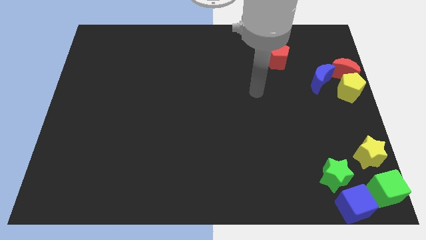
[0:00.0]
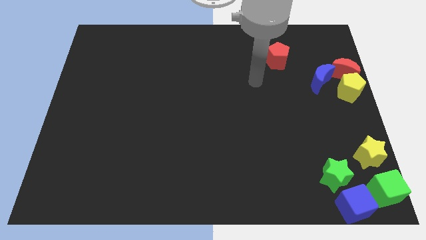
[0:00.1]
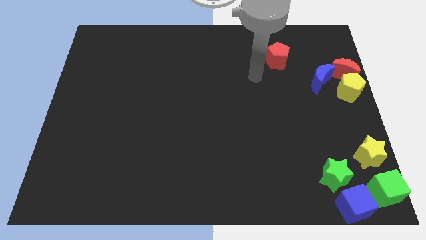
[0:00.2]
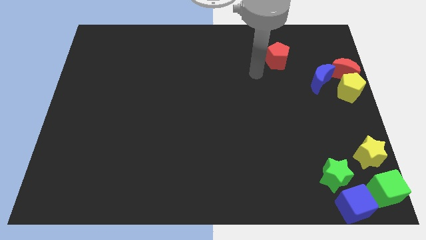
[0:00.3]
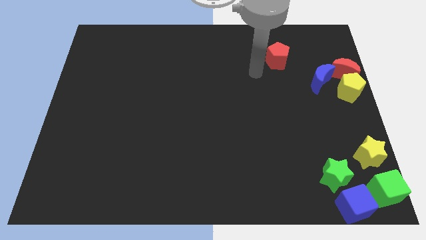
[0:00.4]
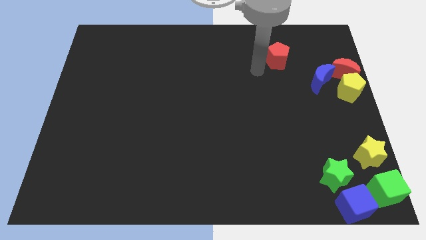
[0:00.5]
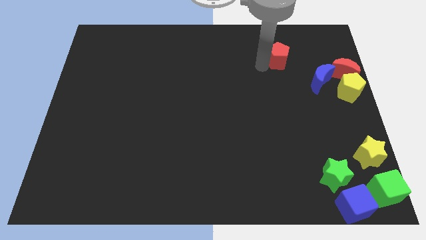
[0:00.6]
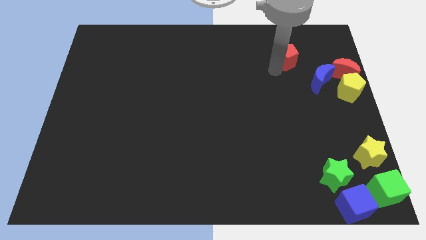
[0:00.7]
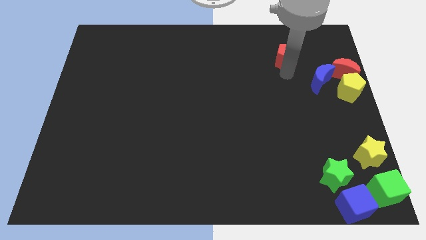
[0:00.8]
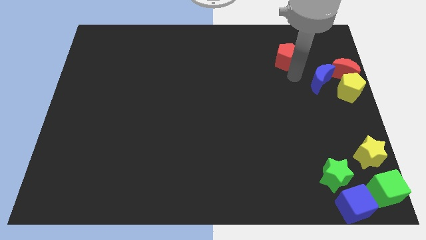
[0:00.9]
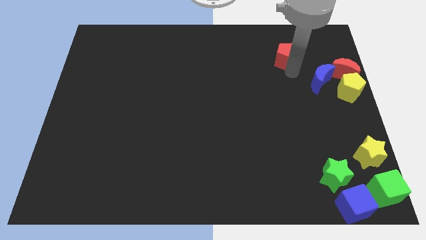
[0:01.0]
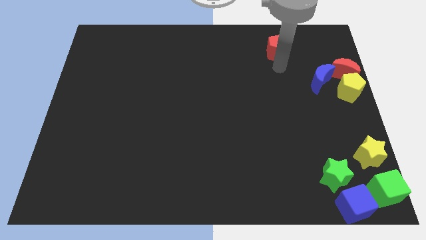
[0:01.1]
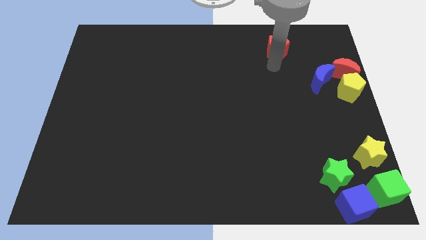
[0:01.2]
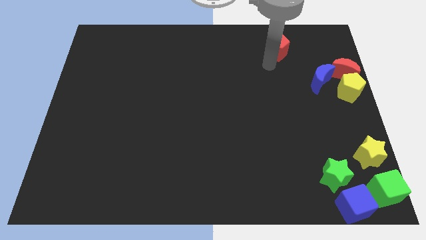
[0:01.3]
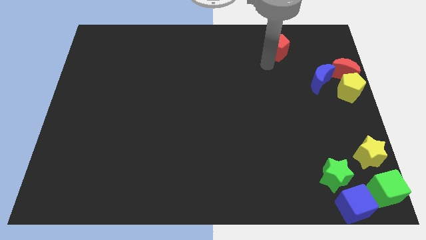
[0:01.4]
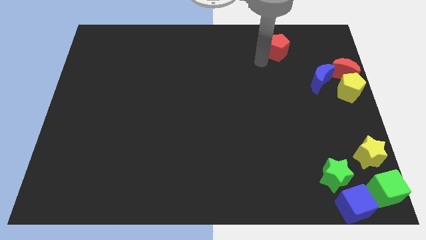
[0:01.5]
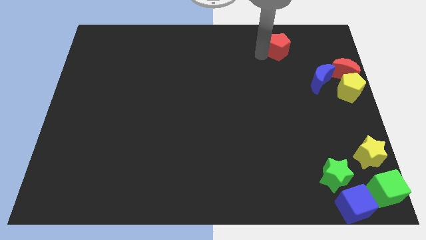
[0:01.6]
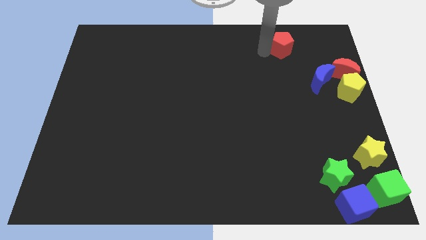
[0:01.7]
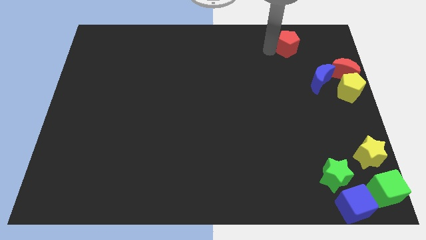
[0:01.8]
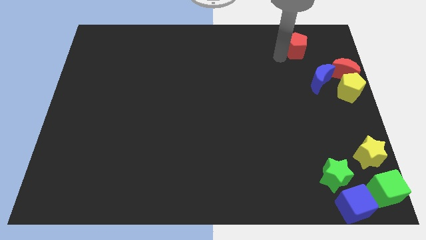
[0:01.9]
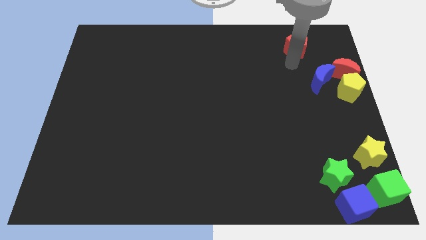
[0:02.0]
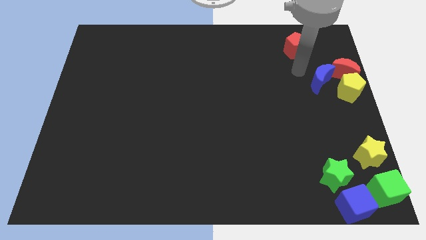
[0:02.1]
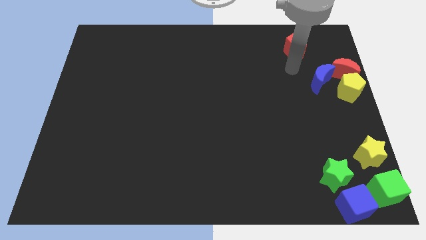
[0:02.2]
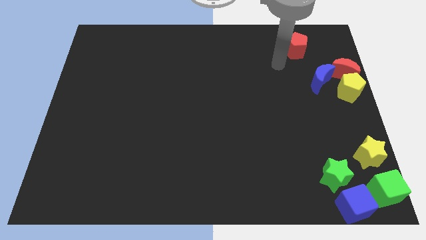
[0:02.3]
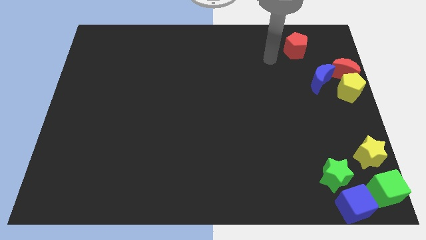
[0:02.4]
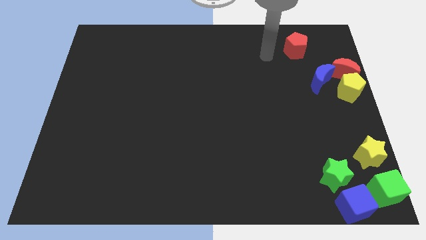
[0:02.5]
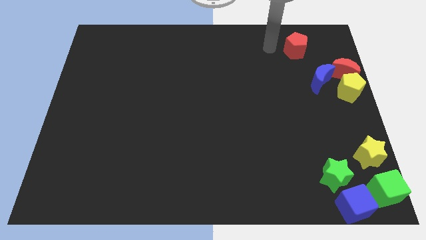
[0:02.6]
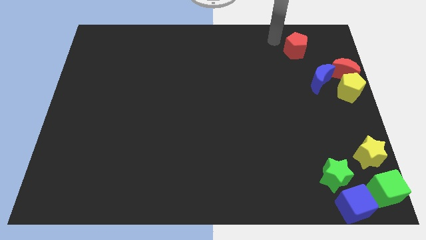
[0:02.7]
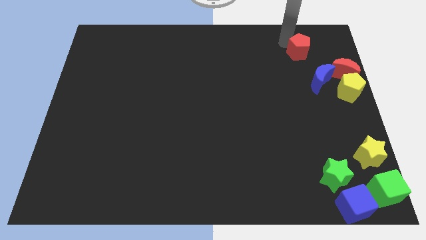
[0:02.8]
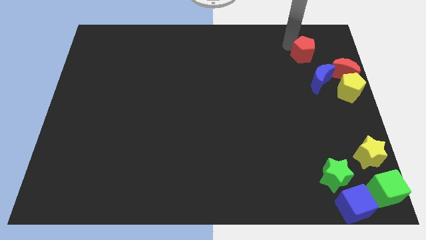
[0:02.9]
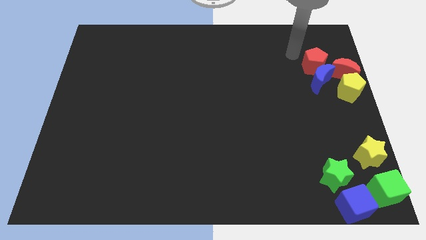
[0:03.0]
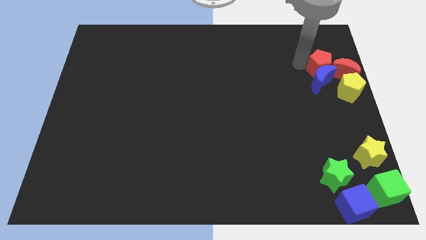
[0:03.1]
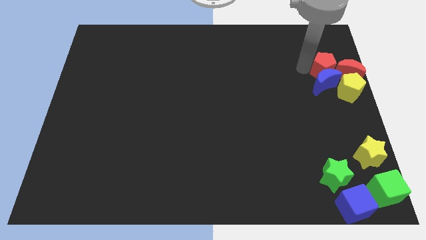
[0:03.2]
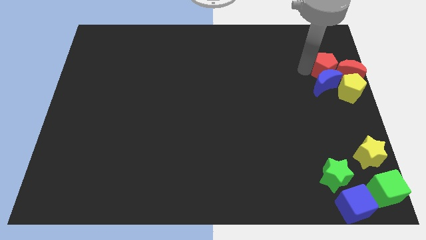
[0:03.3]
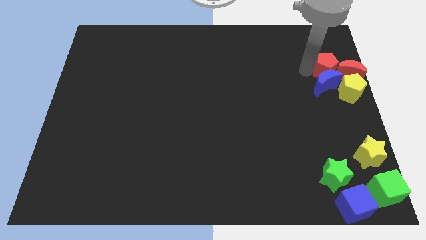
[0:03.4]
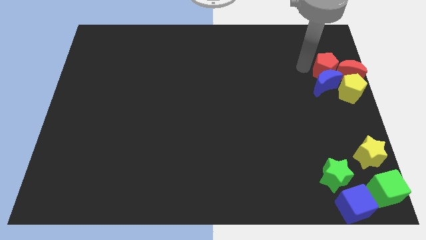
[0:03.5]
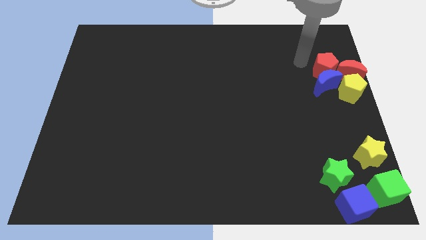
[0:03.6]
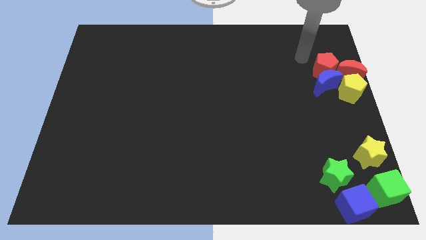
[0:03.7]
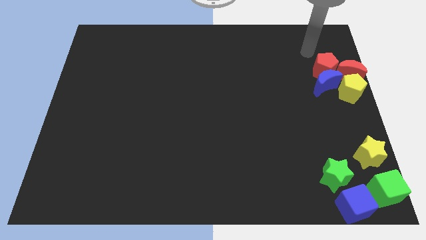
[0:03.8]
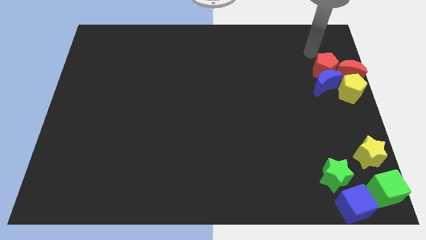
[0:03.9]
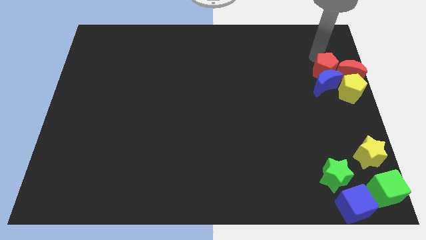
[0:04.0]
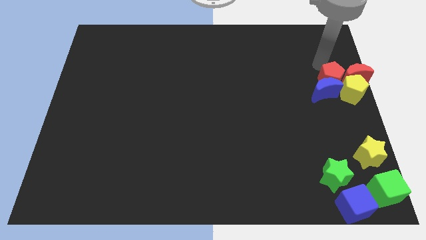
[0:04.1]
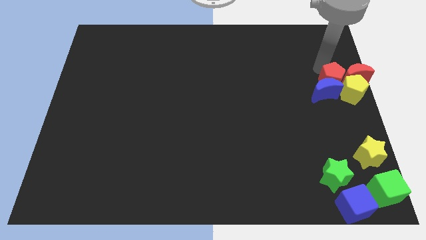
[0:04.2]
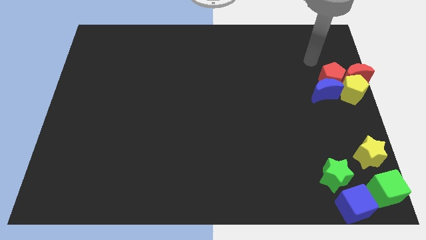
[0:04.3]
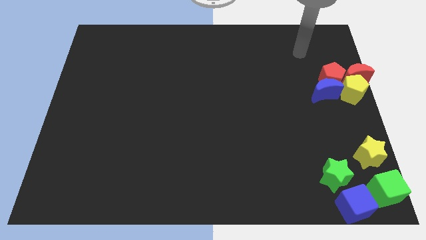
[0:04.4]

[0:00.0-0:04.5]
push the red pentagon into the group of blocks at the center right of the board

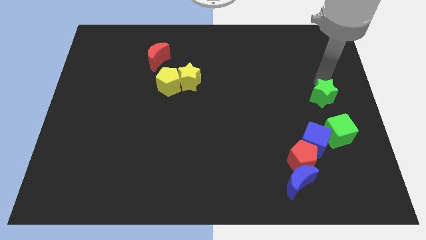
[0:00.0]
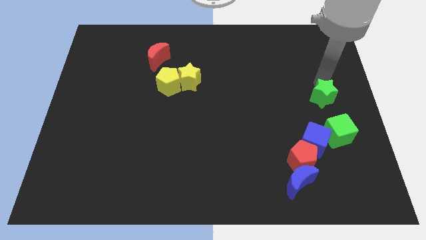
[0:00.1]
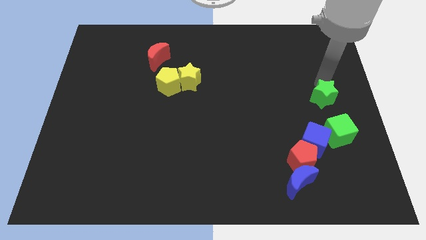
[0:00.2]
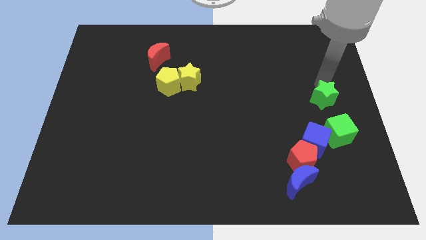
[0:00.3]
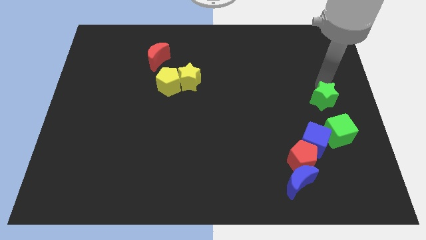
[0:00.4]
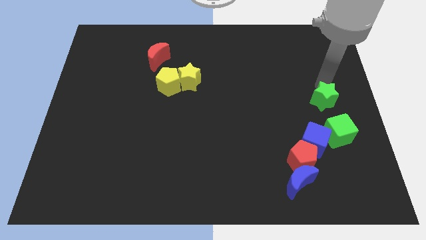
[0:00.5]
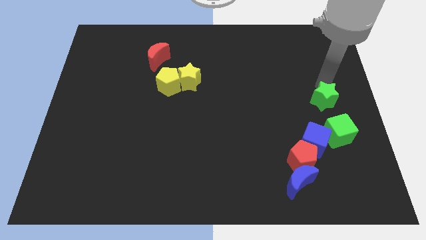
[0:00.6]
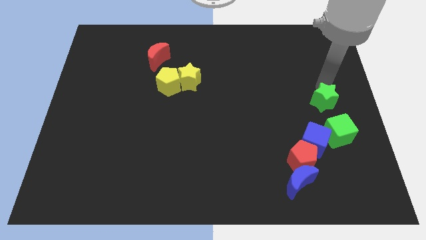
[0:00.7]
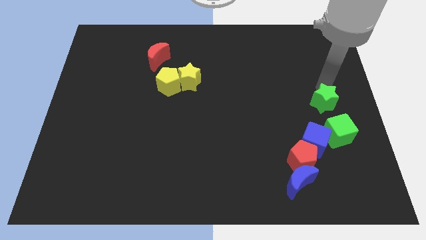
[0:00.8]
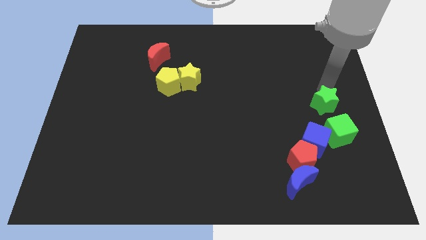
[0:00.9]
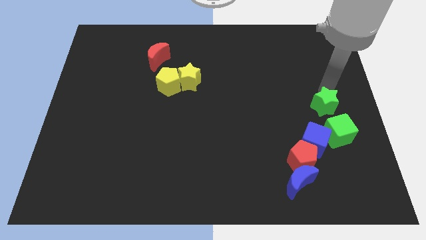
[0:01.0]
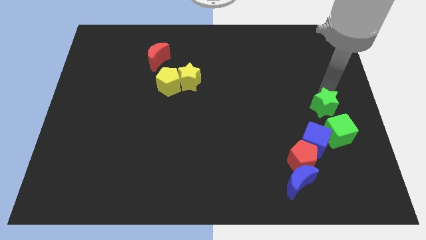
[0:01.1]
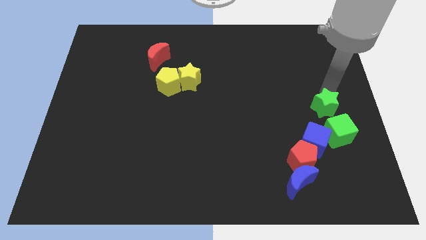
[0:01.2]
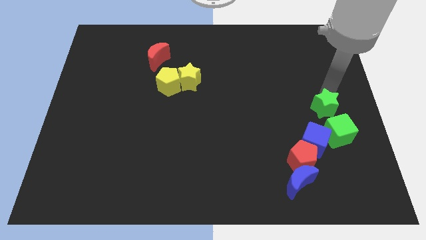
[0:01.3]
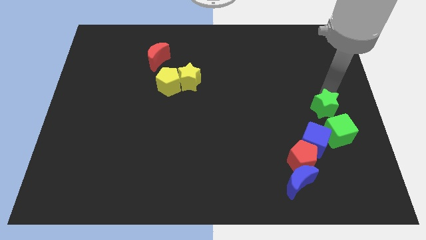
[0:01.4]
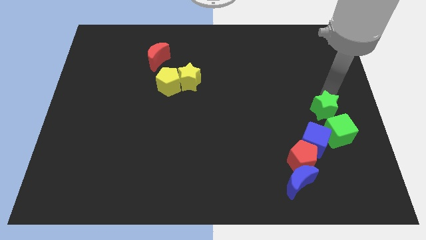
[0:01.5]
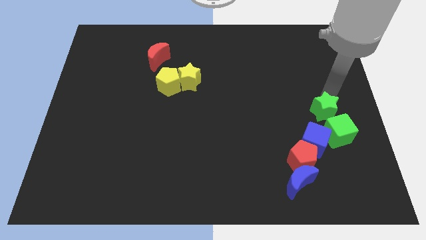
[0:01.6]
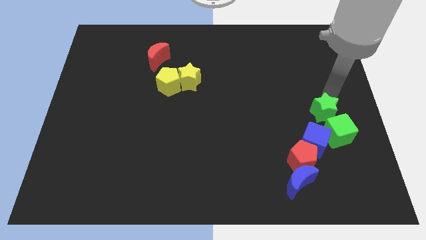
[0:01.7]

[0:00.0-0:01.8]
put the green star at the top of green cube

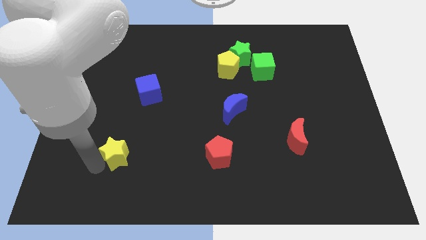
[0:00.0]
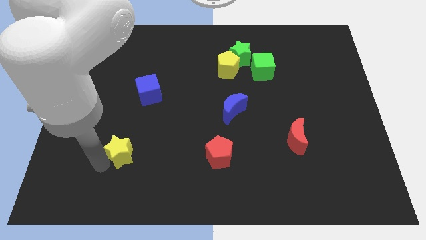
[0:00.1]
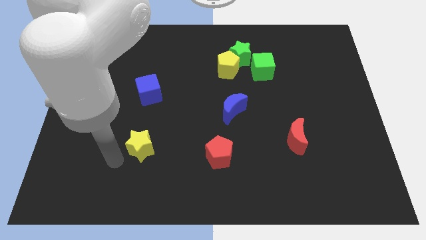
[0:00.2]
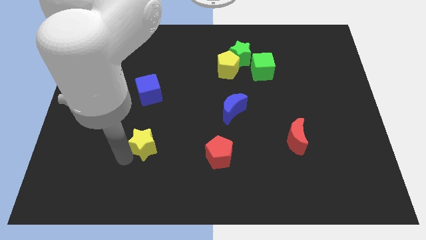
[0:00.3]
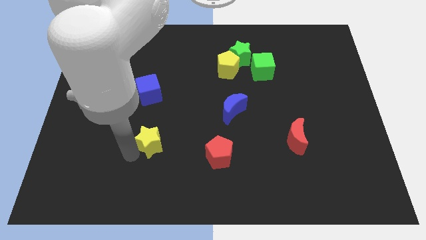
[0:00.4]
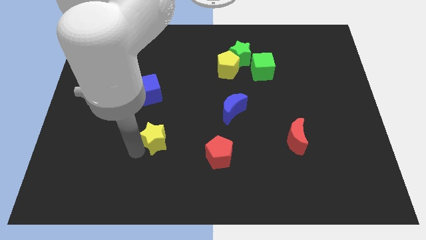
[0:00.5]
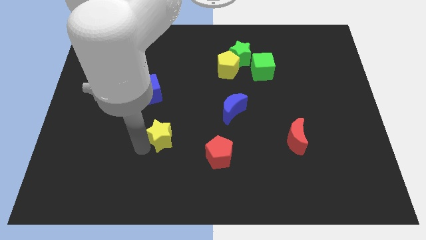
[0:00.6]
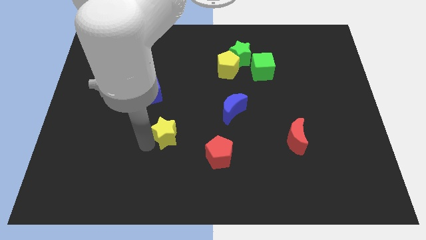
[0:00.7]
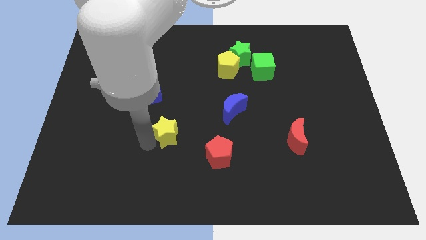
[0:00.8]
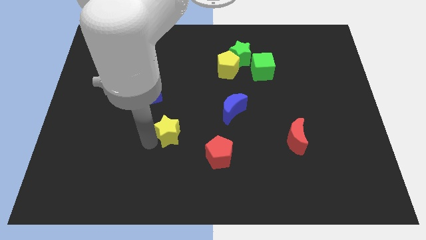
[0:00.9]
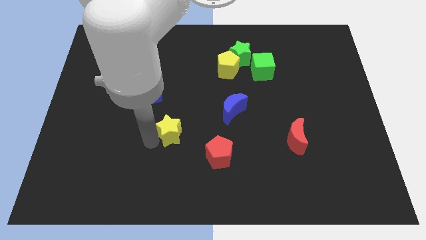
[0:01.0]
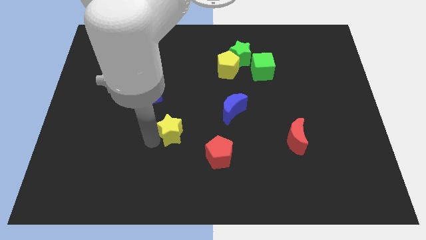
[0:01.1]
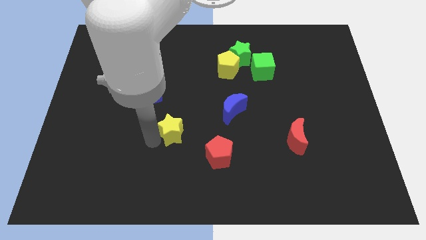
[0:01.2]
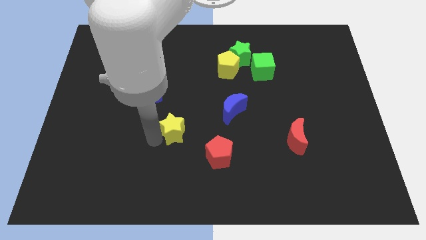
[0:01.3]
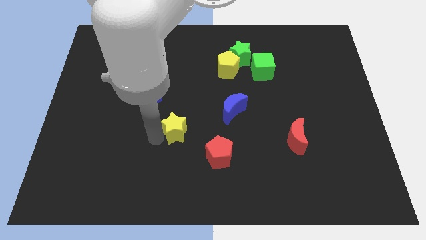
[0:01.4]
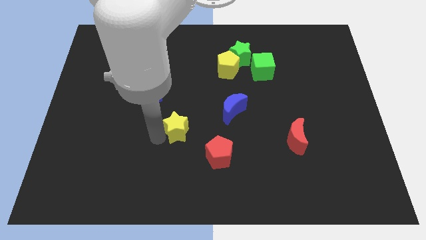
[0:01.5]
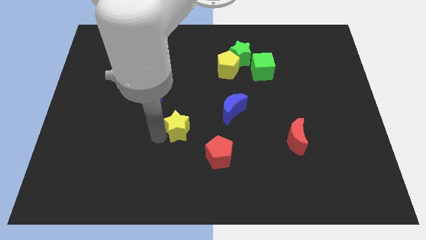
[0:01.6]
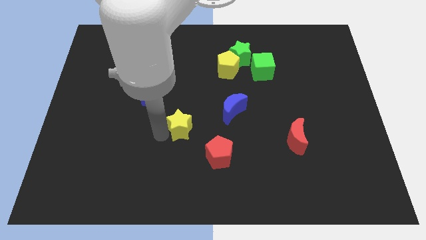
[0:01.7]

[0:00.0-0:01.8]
move the yellow star diagonally to the top left of the red pentagon

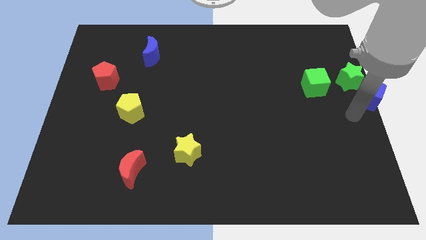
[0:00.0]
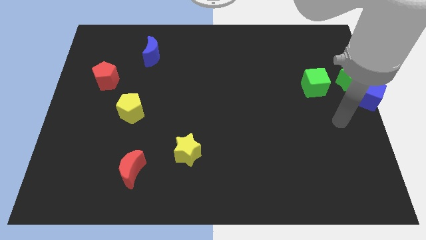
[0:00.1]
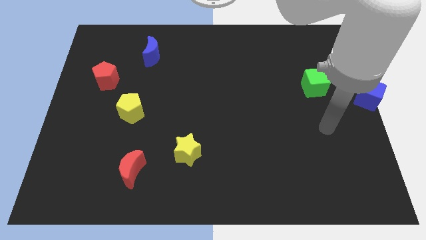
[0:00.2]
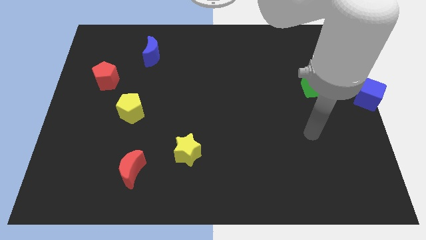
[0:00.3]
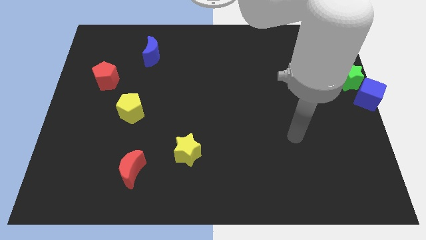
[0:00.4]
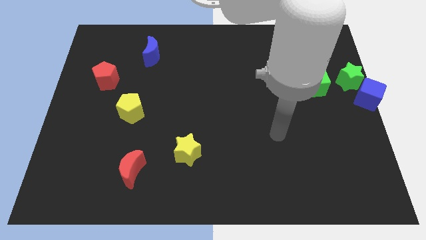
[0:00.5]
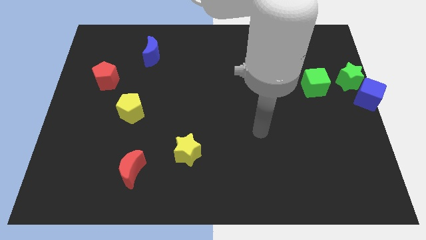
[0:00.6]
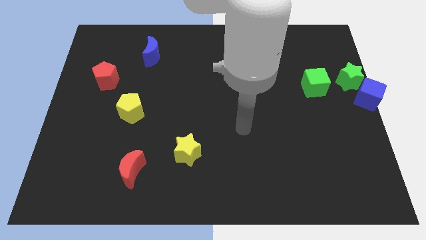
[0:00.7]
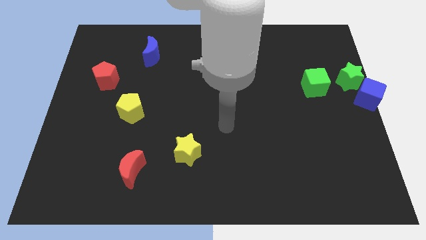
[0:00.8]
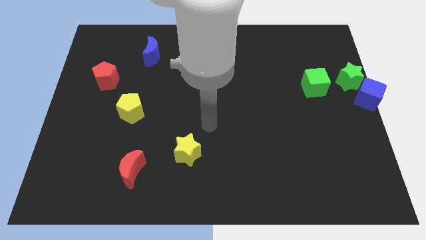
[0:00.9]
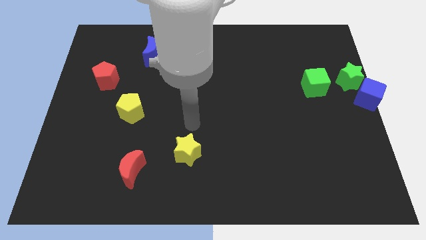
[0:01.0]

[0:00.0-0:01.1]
move your arm above the yellow star
